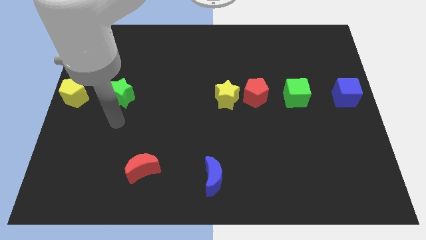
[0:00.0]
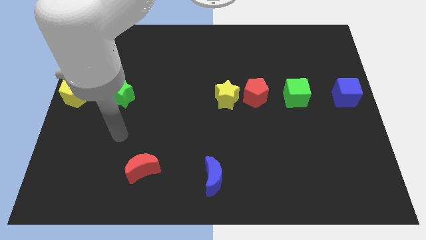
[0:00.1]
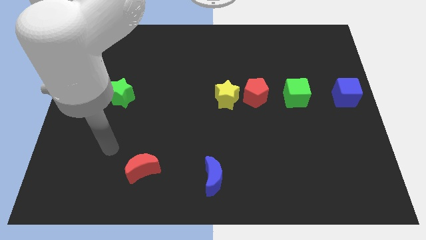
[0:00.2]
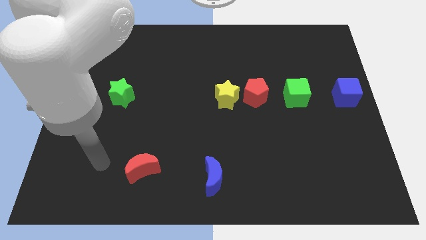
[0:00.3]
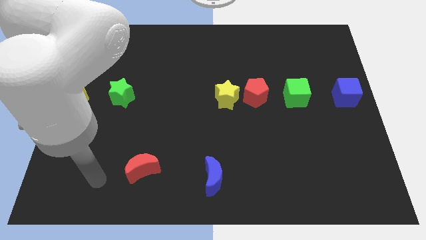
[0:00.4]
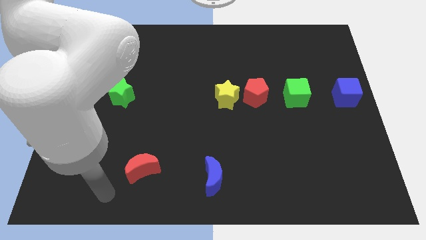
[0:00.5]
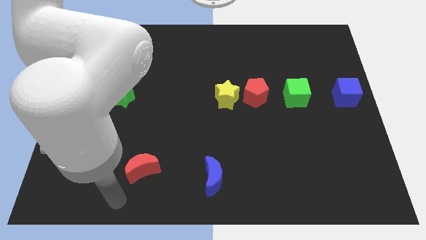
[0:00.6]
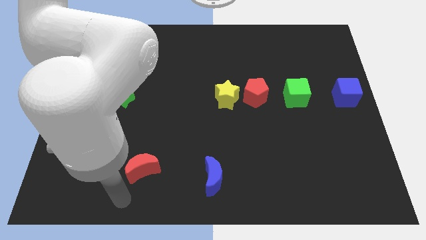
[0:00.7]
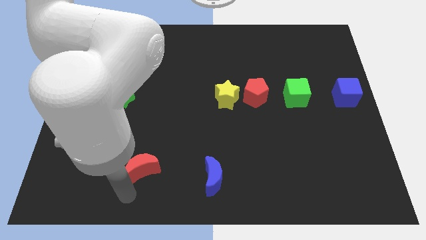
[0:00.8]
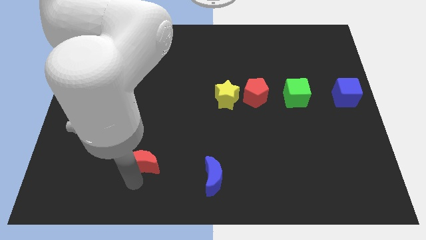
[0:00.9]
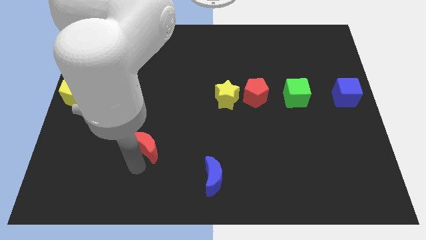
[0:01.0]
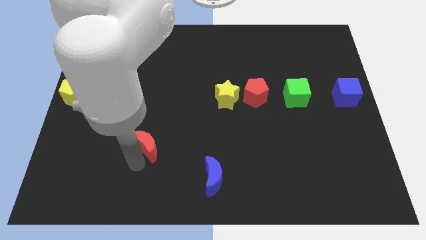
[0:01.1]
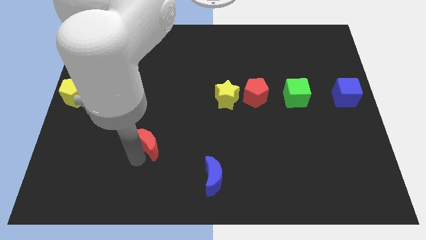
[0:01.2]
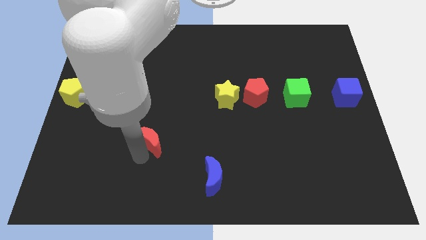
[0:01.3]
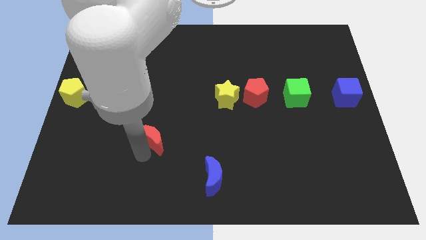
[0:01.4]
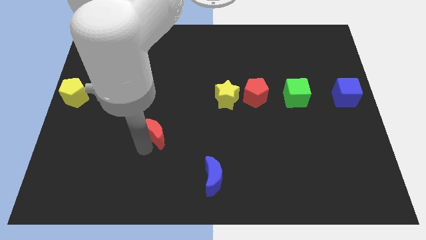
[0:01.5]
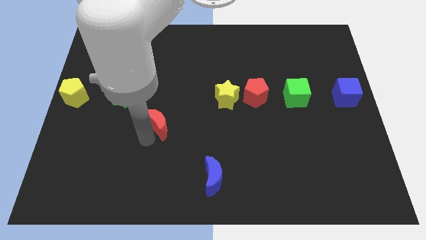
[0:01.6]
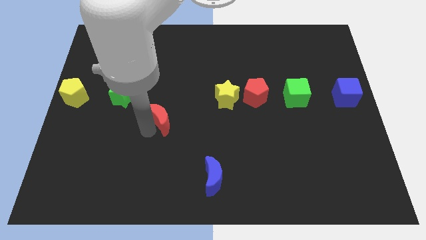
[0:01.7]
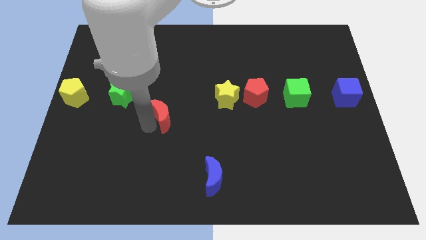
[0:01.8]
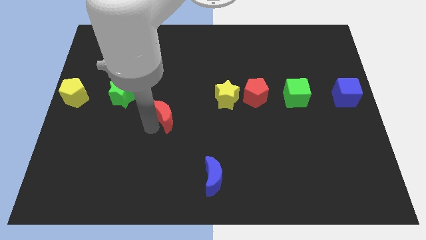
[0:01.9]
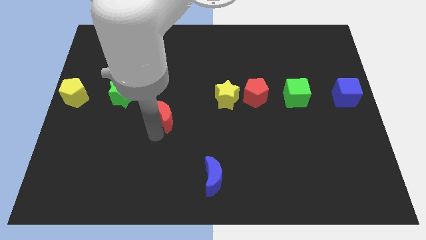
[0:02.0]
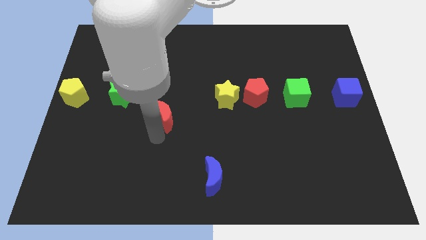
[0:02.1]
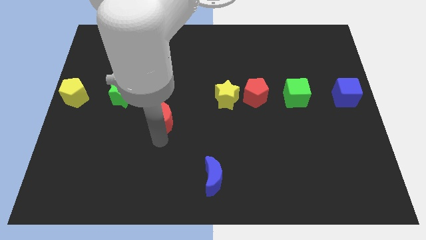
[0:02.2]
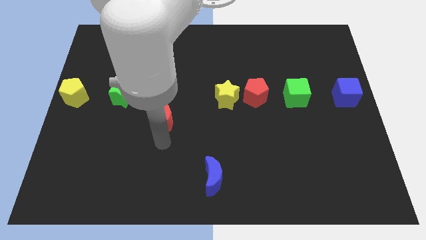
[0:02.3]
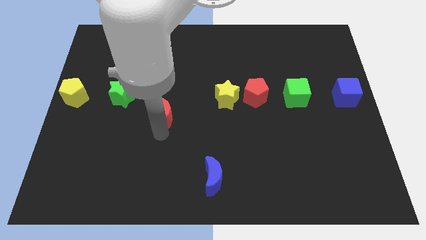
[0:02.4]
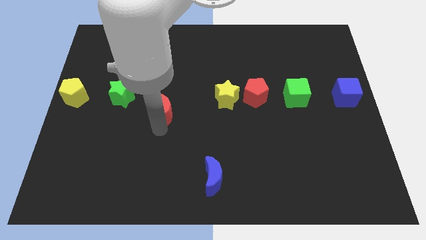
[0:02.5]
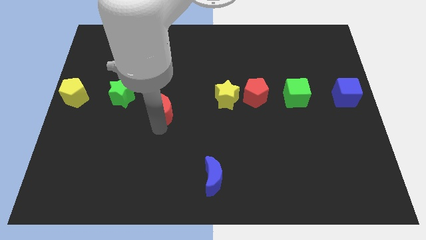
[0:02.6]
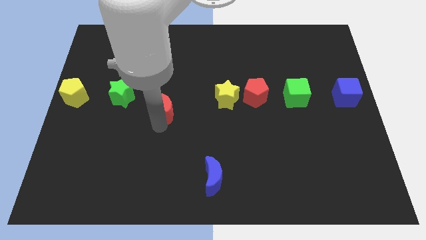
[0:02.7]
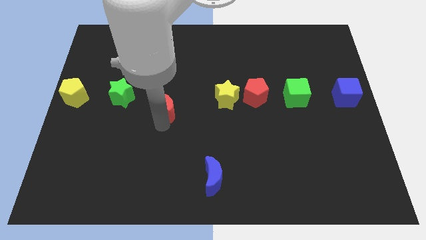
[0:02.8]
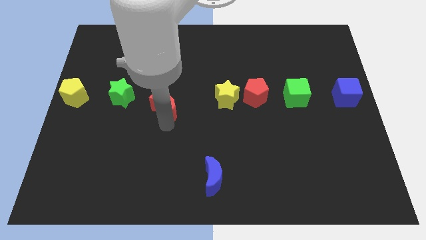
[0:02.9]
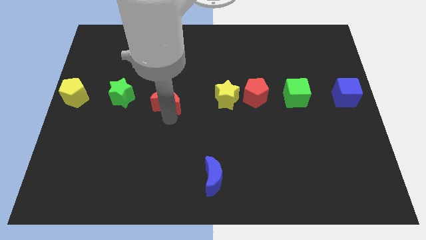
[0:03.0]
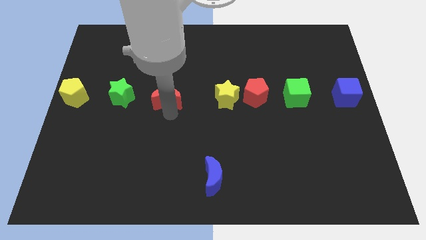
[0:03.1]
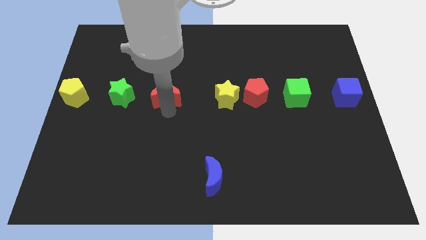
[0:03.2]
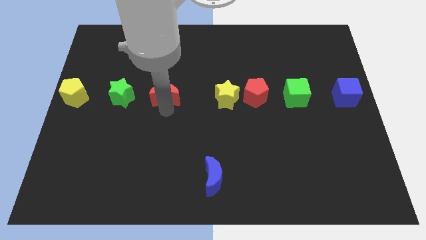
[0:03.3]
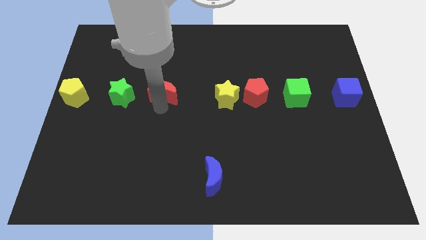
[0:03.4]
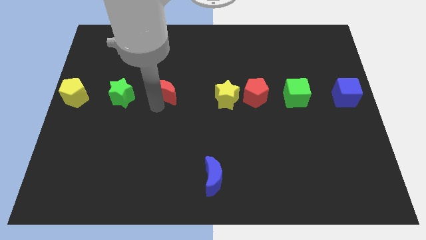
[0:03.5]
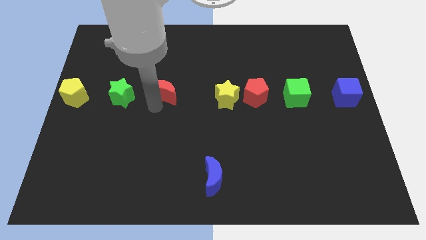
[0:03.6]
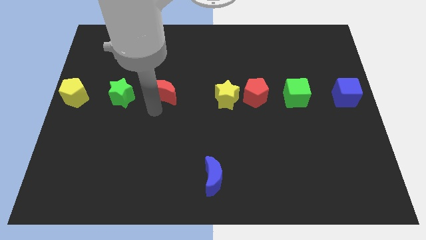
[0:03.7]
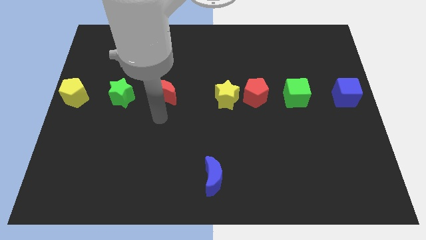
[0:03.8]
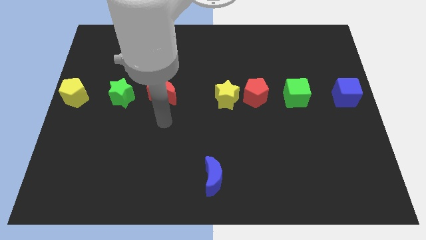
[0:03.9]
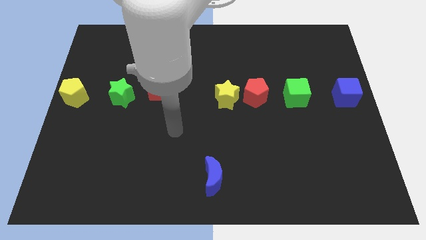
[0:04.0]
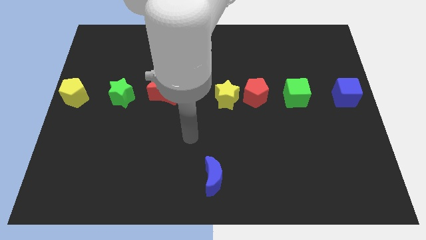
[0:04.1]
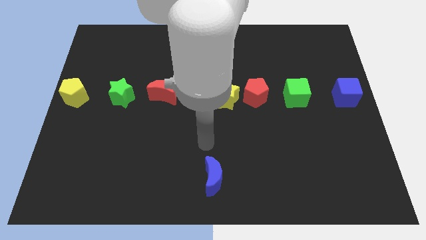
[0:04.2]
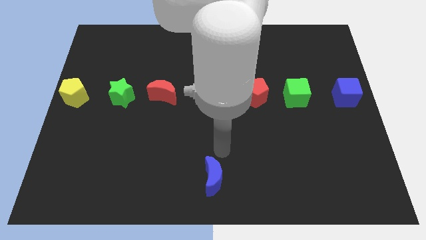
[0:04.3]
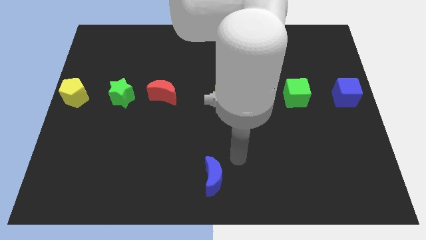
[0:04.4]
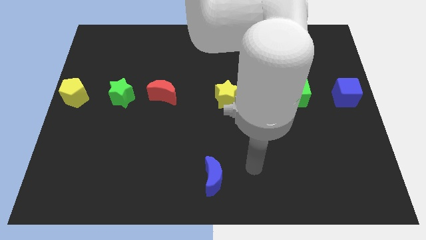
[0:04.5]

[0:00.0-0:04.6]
push the red moon upward

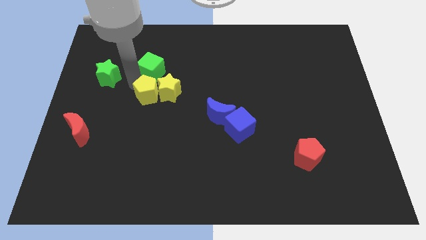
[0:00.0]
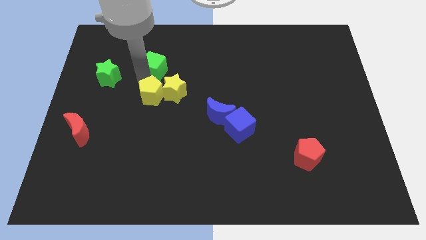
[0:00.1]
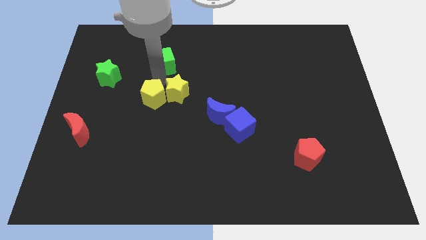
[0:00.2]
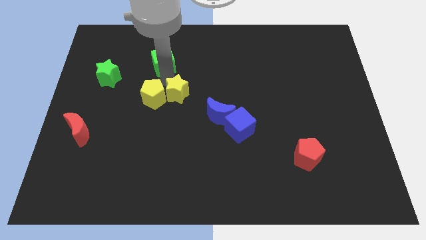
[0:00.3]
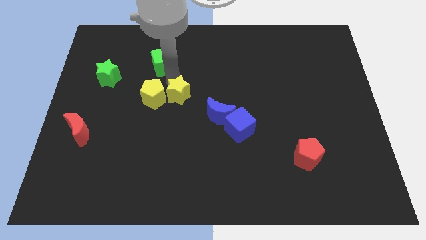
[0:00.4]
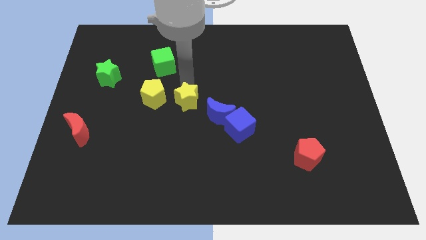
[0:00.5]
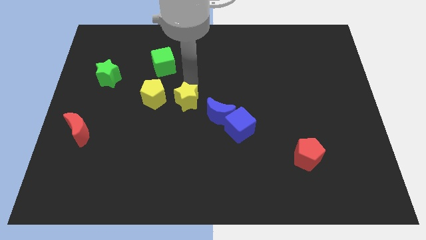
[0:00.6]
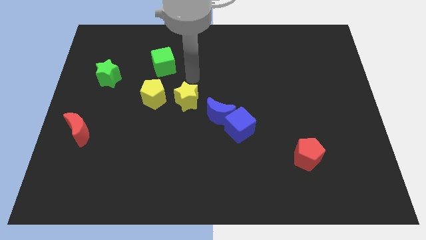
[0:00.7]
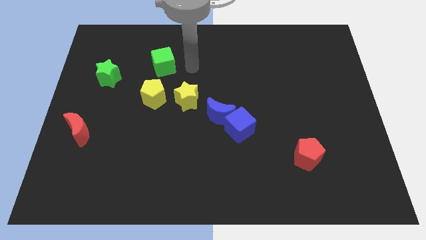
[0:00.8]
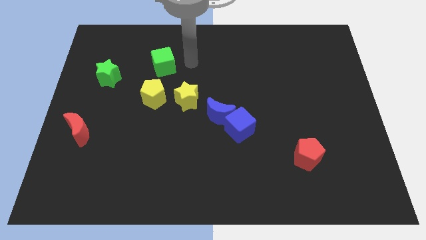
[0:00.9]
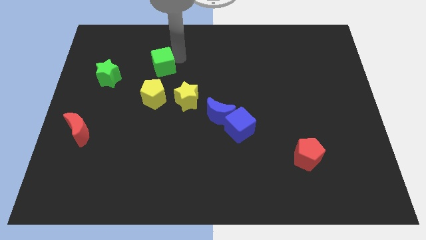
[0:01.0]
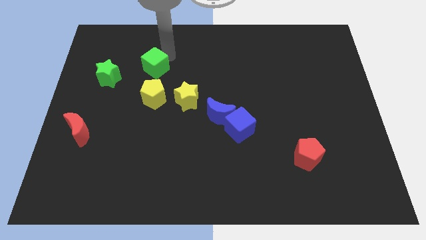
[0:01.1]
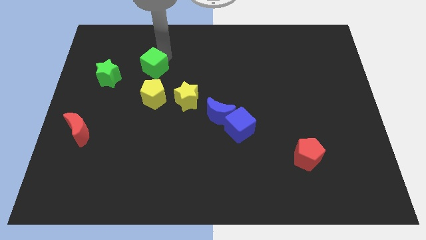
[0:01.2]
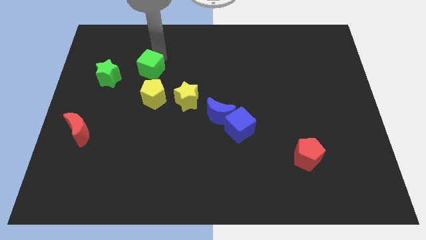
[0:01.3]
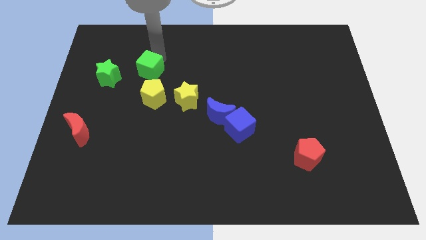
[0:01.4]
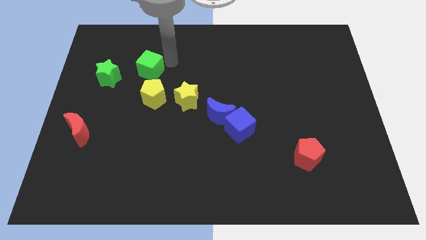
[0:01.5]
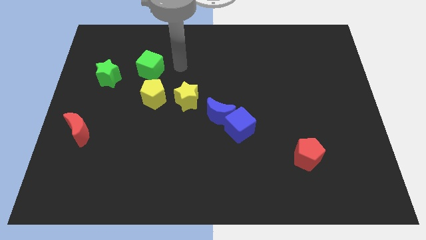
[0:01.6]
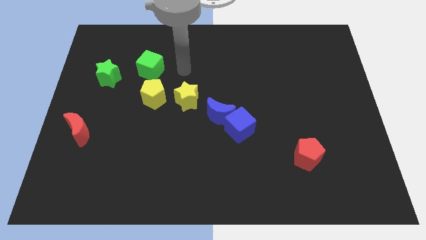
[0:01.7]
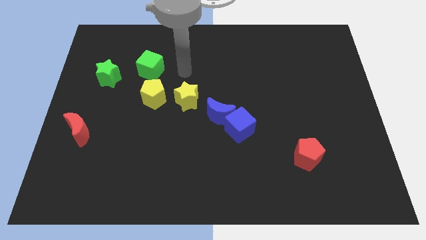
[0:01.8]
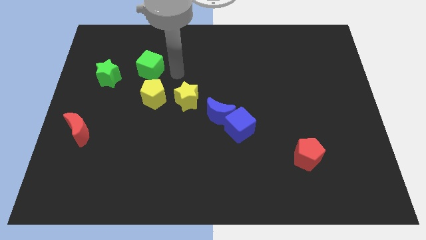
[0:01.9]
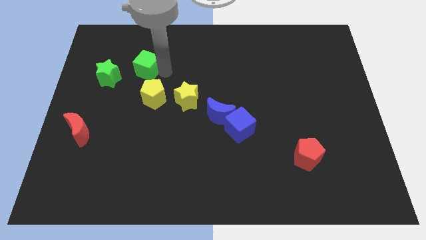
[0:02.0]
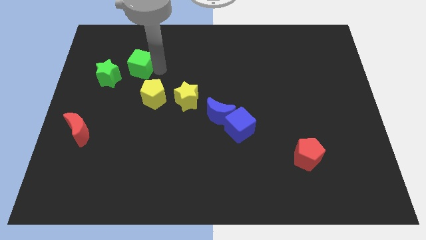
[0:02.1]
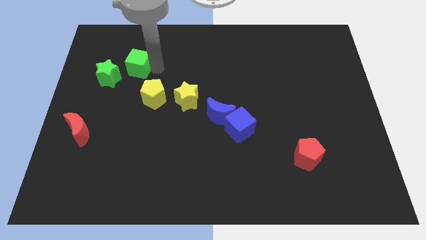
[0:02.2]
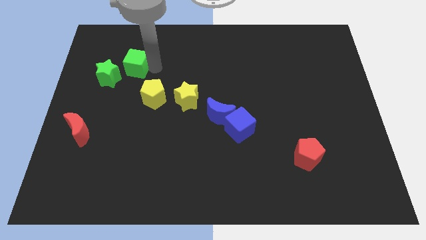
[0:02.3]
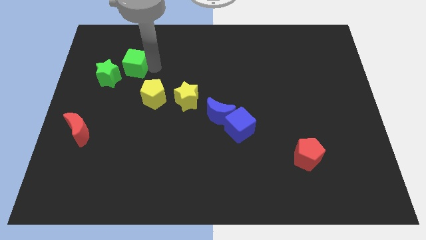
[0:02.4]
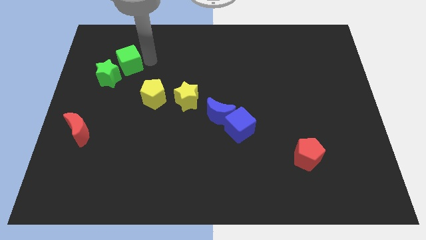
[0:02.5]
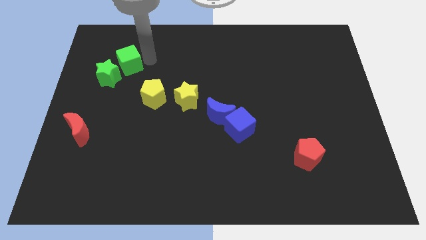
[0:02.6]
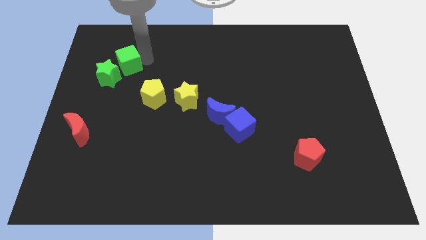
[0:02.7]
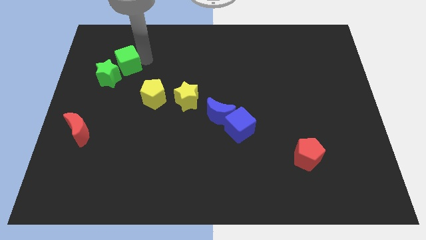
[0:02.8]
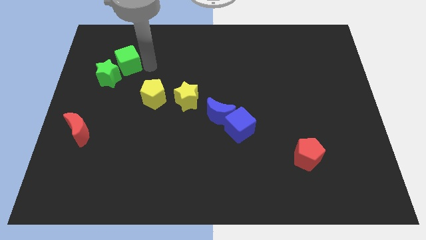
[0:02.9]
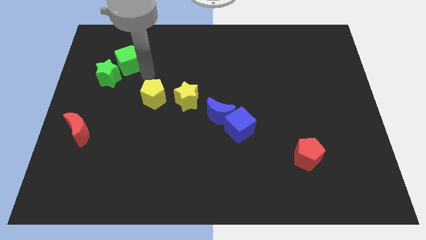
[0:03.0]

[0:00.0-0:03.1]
separate green cube from yellow blocks

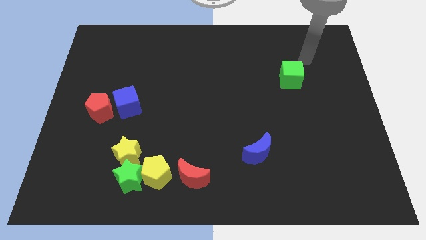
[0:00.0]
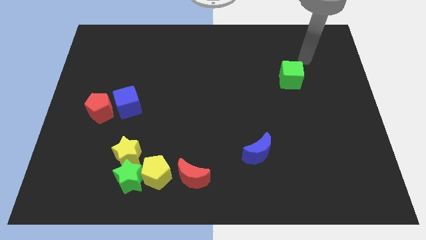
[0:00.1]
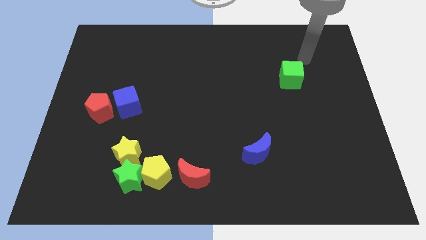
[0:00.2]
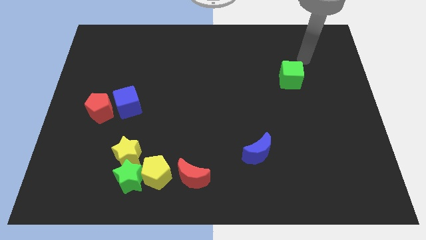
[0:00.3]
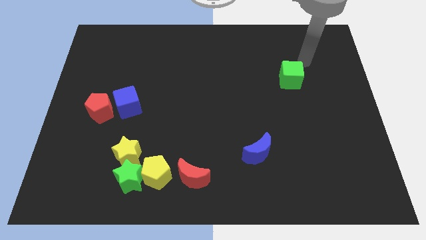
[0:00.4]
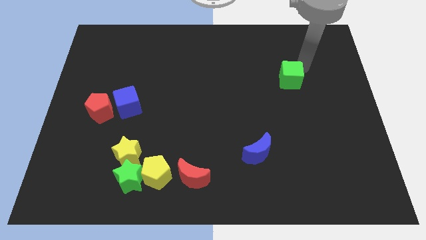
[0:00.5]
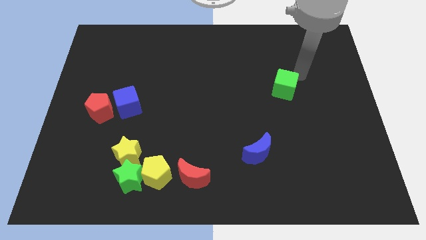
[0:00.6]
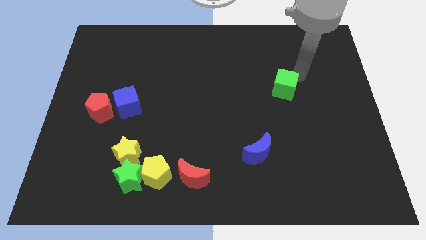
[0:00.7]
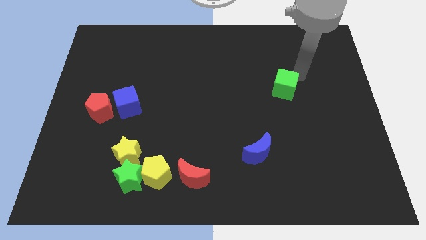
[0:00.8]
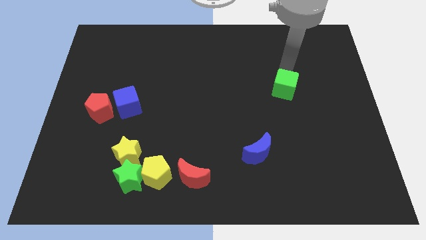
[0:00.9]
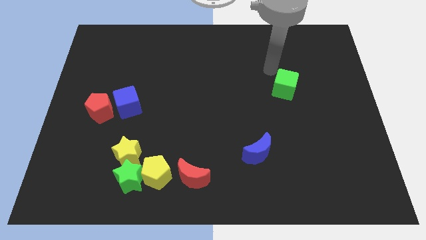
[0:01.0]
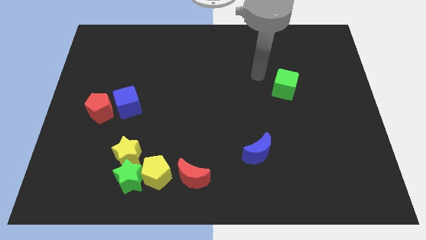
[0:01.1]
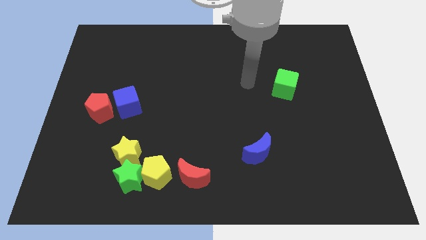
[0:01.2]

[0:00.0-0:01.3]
move the green cube downwards slightly
